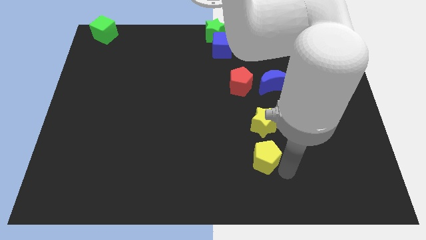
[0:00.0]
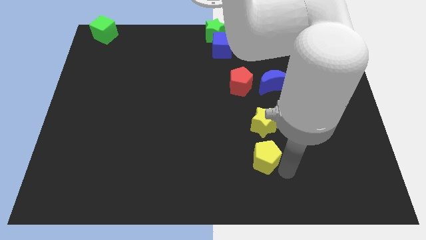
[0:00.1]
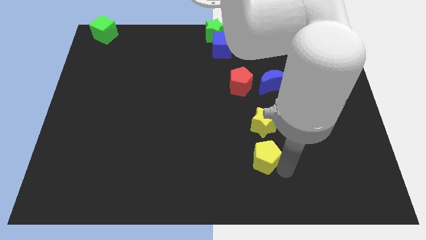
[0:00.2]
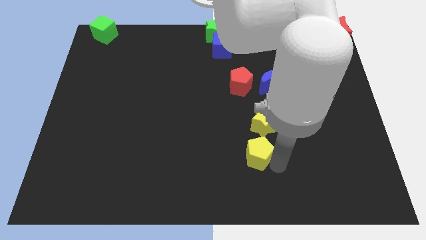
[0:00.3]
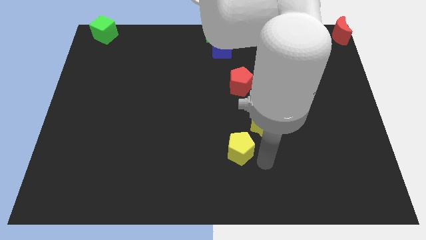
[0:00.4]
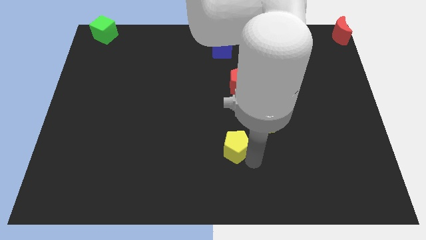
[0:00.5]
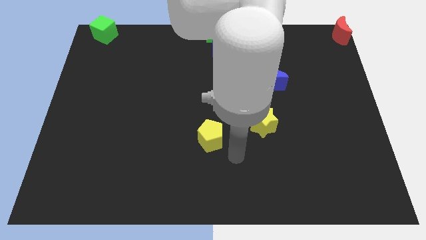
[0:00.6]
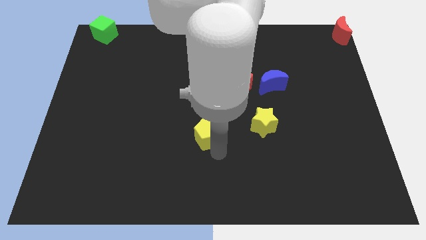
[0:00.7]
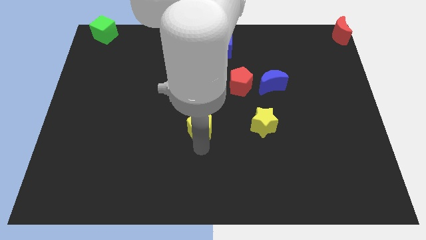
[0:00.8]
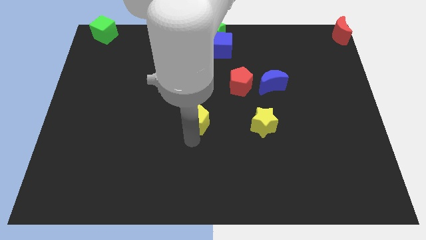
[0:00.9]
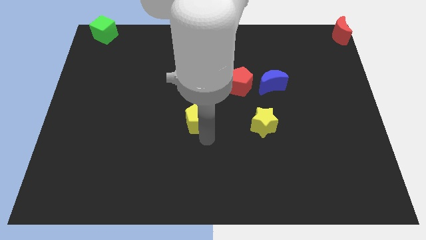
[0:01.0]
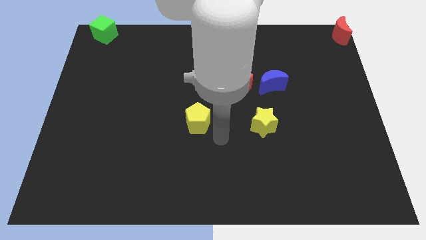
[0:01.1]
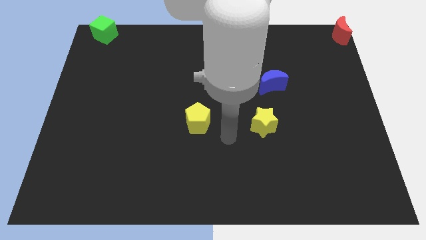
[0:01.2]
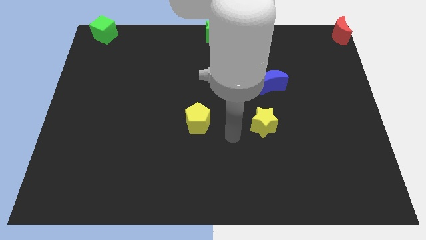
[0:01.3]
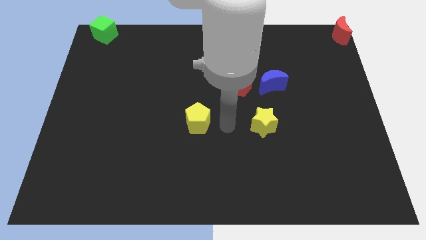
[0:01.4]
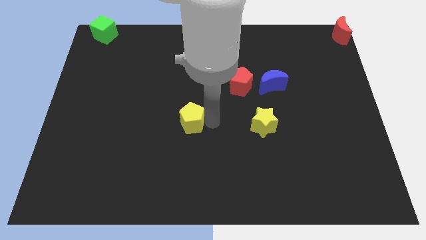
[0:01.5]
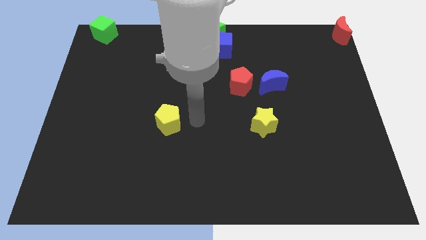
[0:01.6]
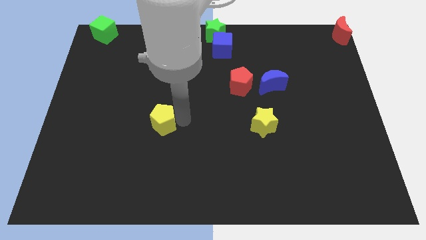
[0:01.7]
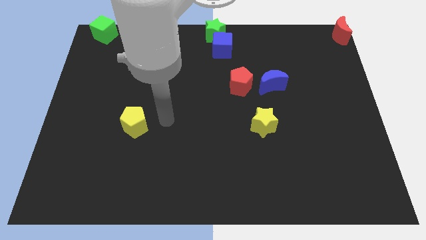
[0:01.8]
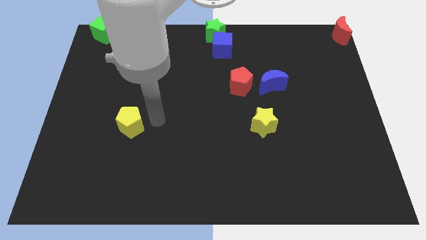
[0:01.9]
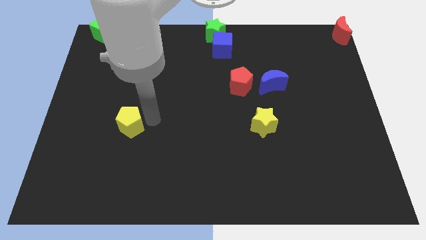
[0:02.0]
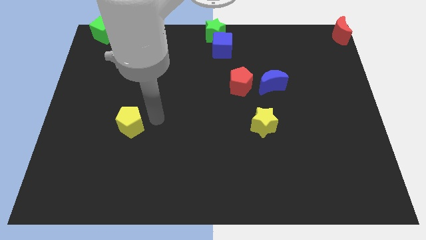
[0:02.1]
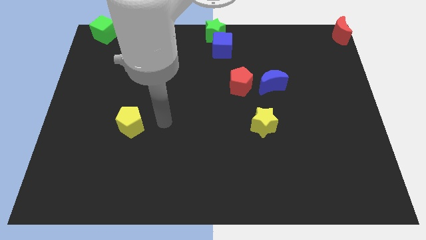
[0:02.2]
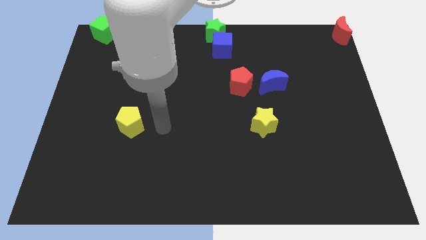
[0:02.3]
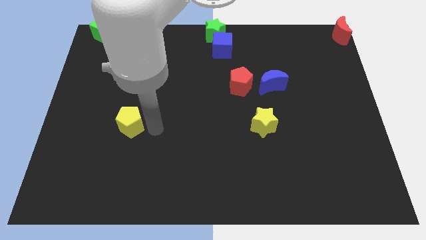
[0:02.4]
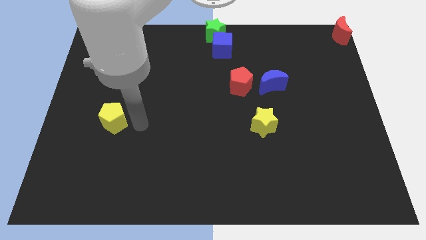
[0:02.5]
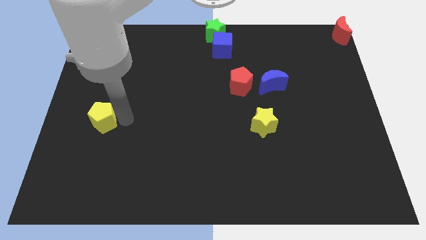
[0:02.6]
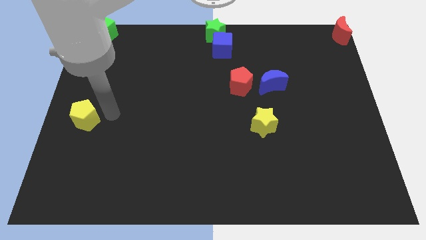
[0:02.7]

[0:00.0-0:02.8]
move the yellow pentagon towards the left center

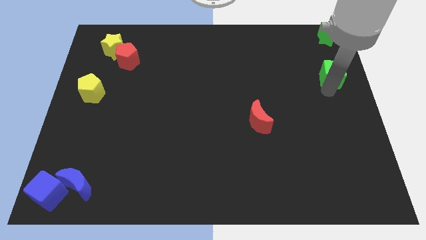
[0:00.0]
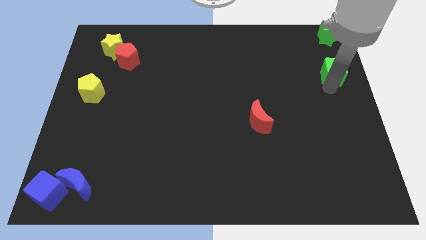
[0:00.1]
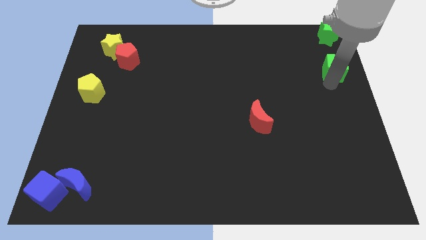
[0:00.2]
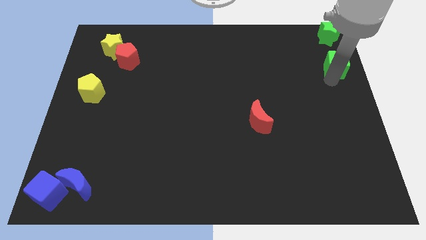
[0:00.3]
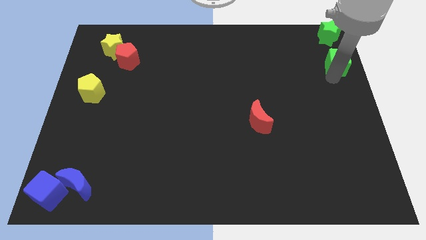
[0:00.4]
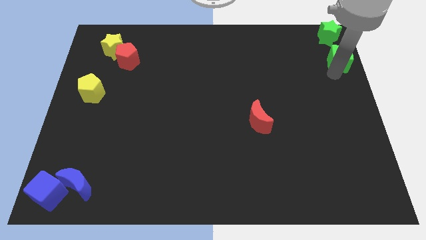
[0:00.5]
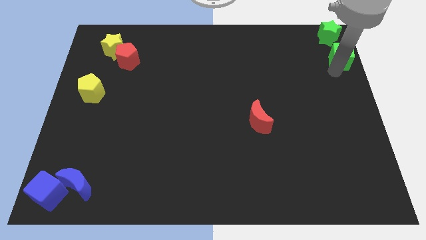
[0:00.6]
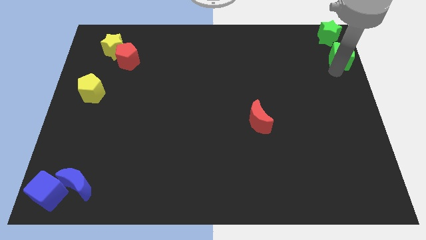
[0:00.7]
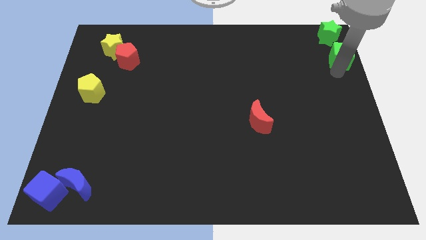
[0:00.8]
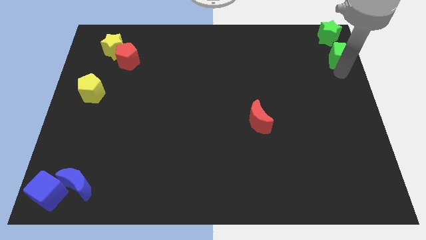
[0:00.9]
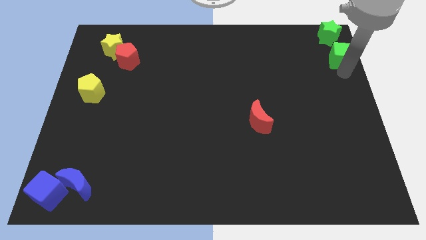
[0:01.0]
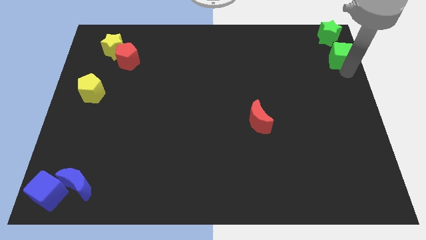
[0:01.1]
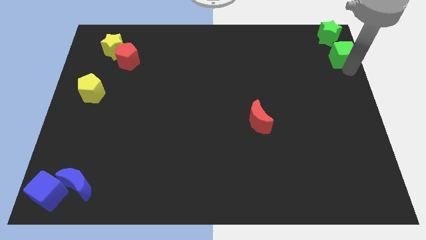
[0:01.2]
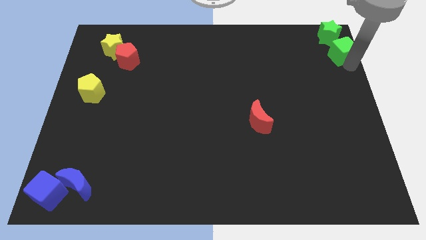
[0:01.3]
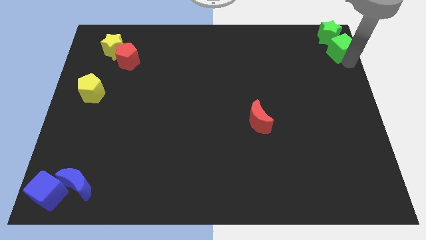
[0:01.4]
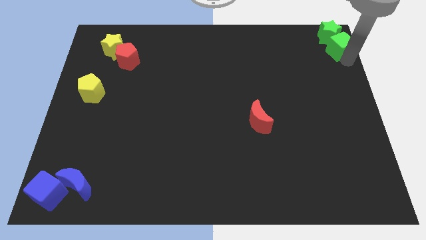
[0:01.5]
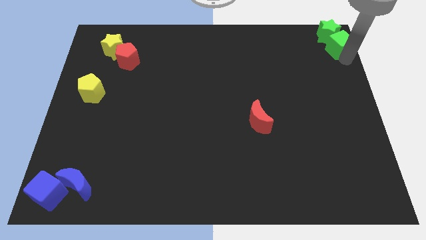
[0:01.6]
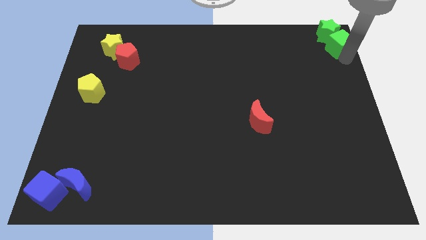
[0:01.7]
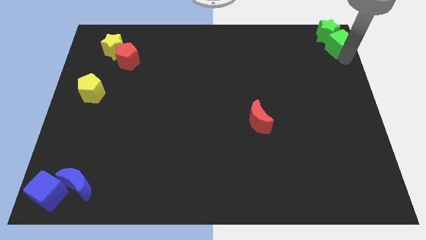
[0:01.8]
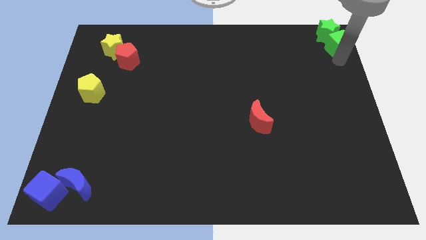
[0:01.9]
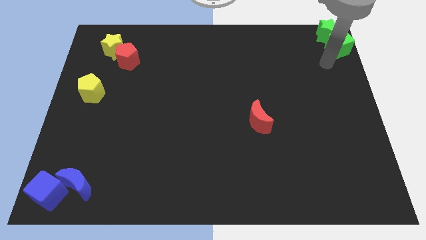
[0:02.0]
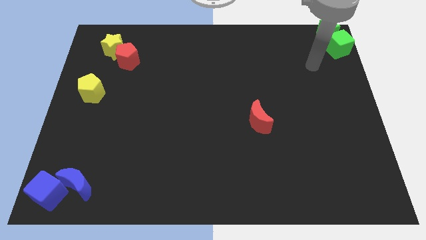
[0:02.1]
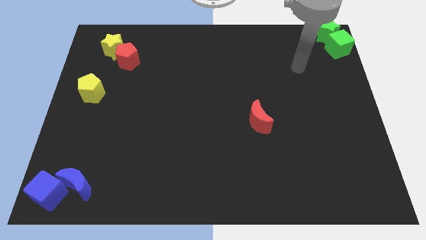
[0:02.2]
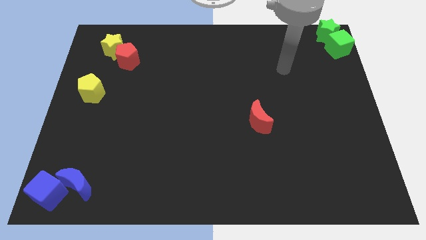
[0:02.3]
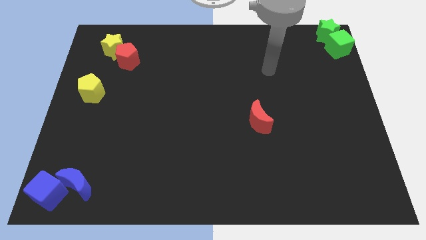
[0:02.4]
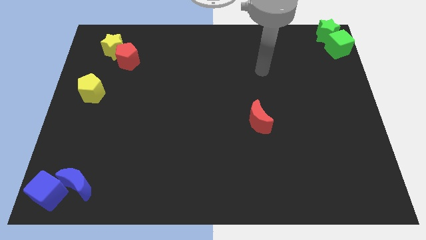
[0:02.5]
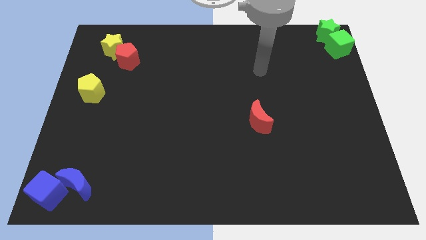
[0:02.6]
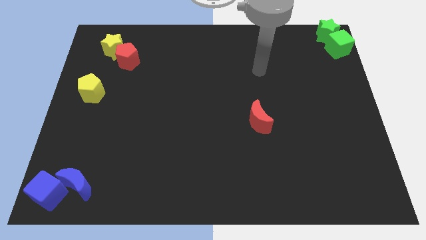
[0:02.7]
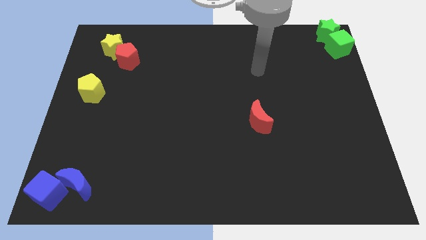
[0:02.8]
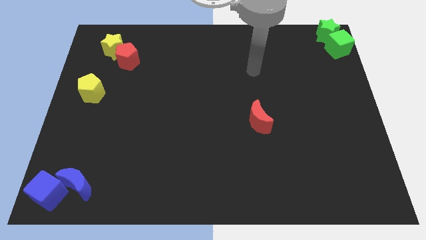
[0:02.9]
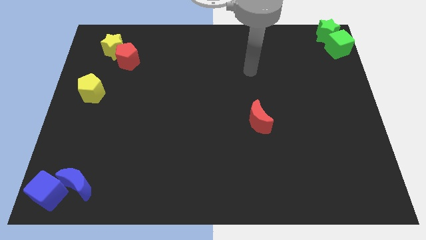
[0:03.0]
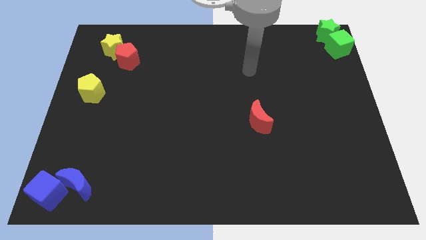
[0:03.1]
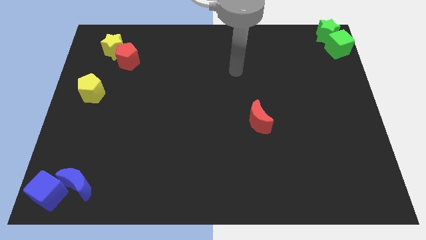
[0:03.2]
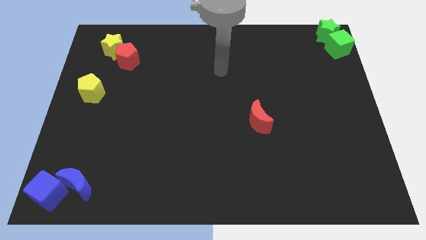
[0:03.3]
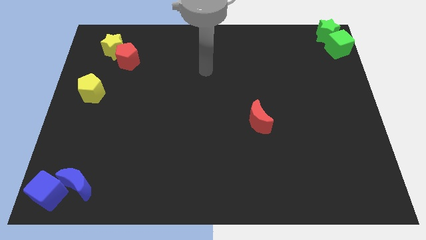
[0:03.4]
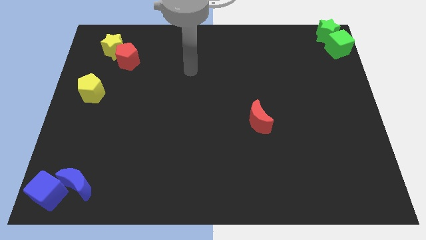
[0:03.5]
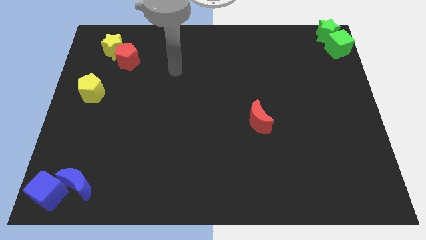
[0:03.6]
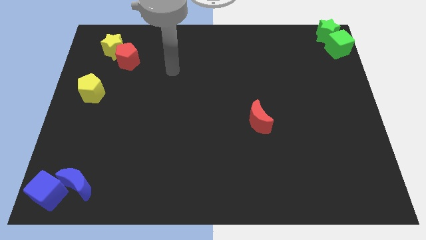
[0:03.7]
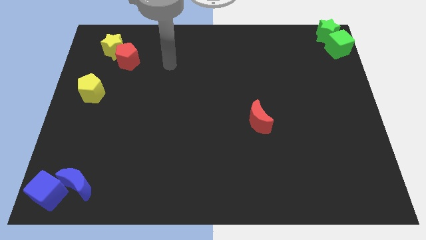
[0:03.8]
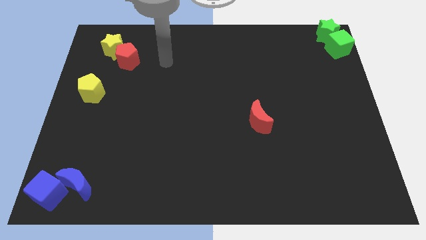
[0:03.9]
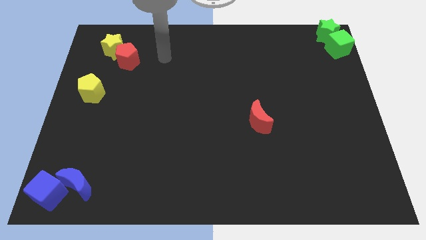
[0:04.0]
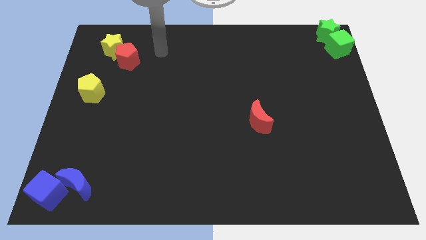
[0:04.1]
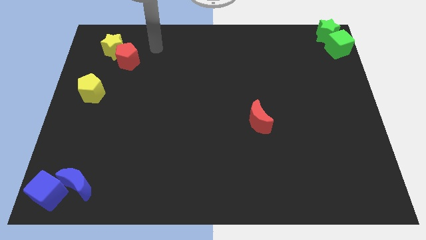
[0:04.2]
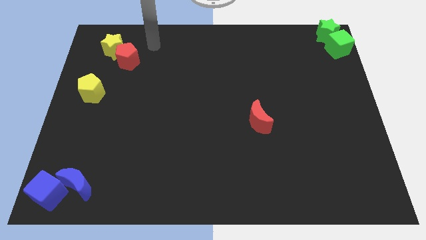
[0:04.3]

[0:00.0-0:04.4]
place the green cube below the green star

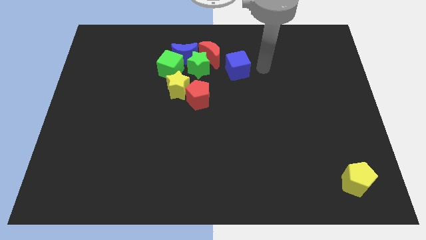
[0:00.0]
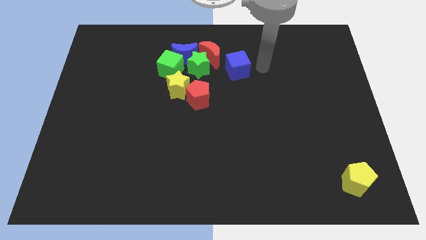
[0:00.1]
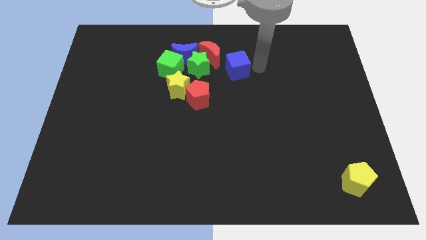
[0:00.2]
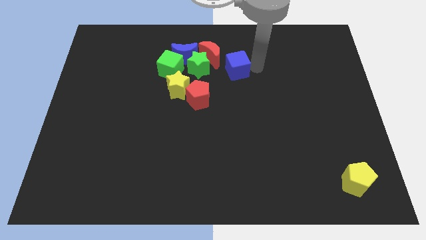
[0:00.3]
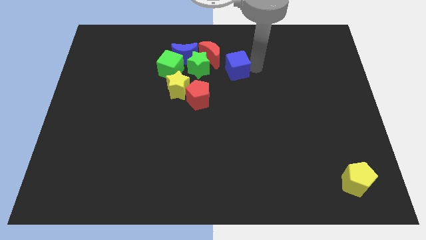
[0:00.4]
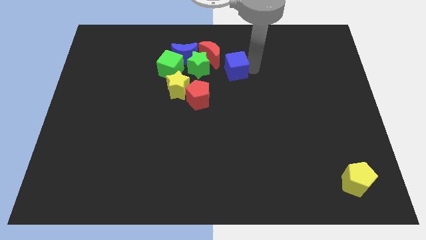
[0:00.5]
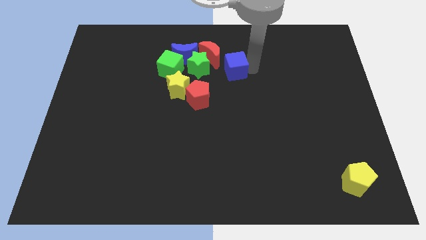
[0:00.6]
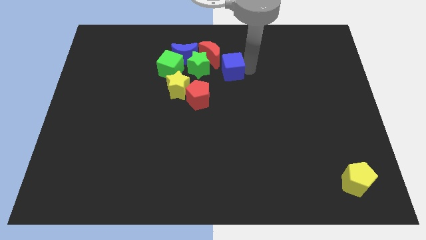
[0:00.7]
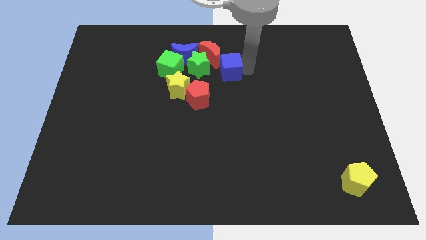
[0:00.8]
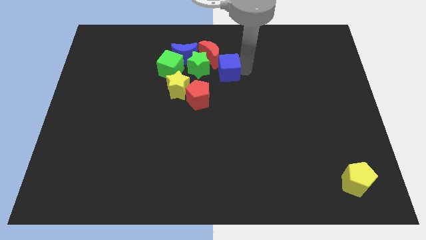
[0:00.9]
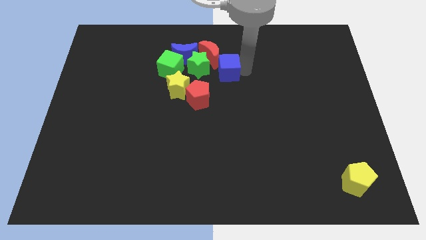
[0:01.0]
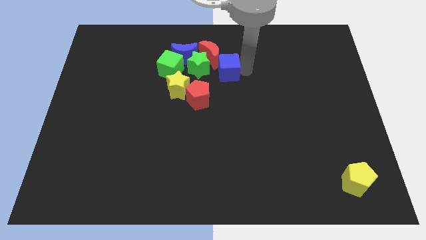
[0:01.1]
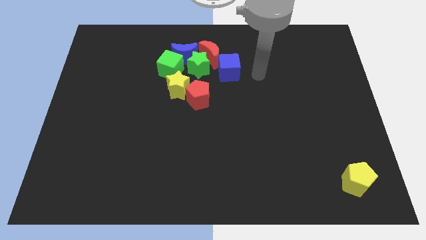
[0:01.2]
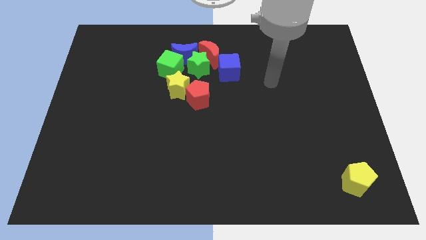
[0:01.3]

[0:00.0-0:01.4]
push blue cube close to red crescent

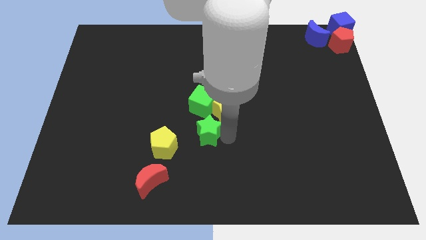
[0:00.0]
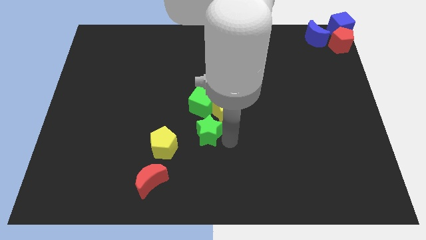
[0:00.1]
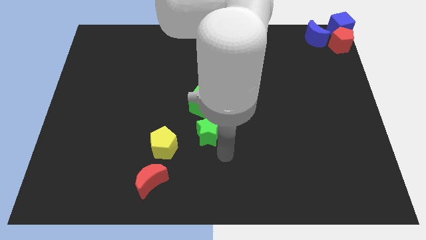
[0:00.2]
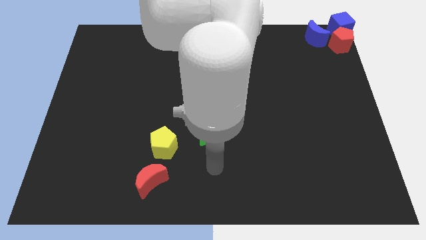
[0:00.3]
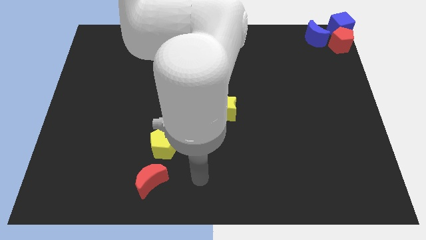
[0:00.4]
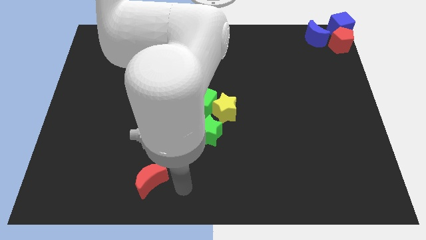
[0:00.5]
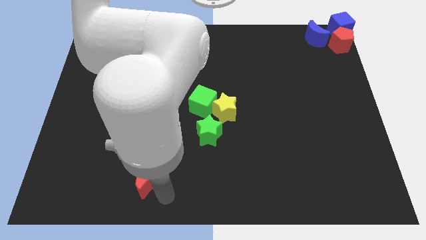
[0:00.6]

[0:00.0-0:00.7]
point your arm to the right side of red moon
